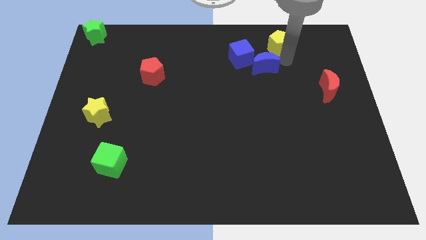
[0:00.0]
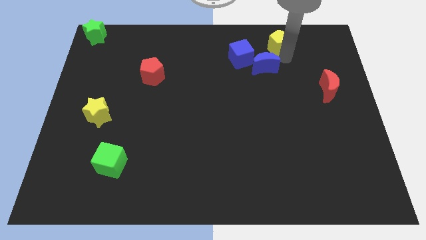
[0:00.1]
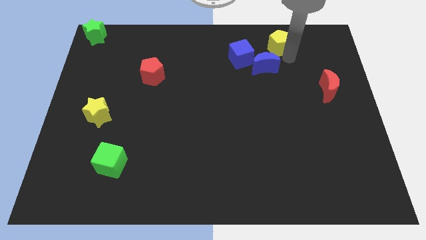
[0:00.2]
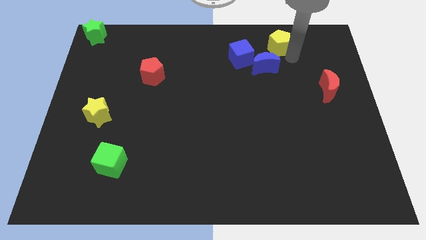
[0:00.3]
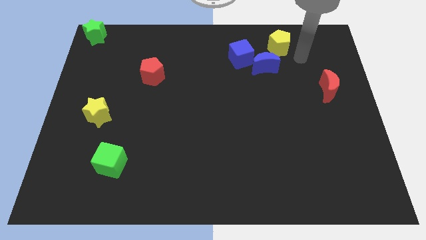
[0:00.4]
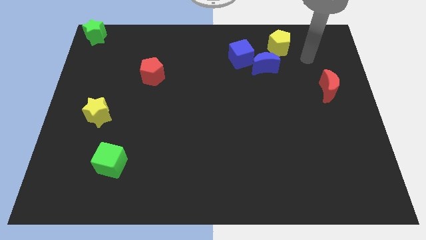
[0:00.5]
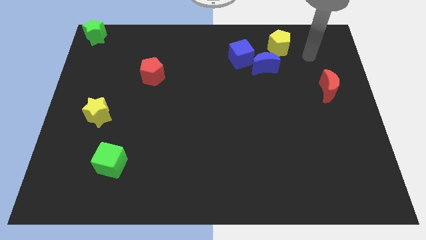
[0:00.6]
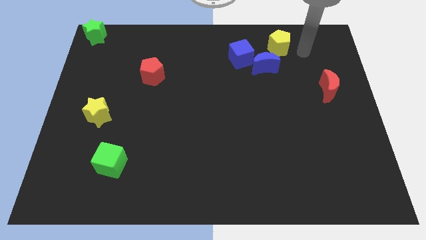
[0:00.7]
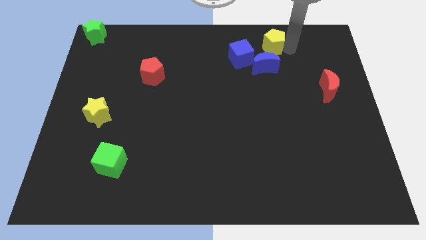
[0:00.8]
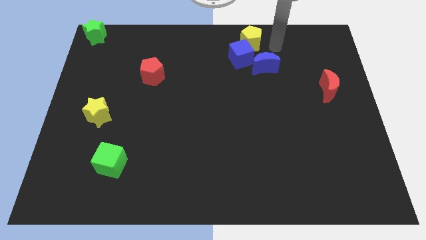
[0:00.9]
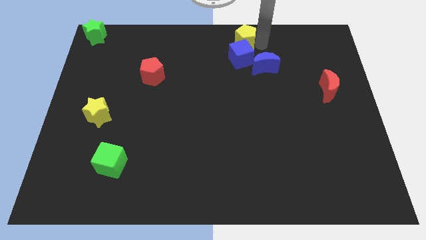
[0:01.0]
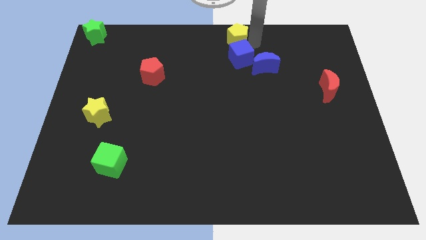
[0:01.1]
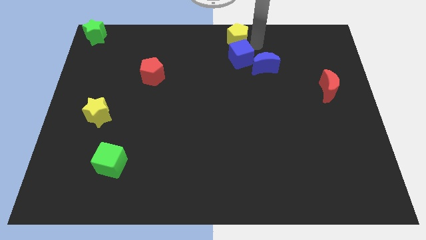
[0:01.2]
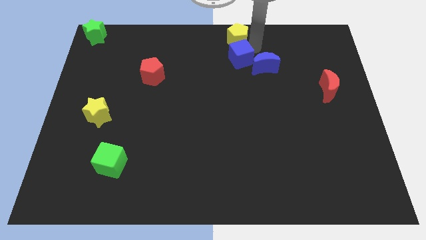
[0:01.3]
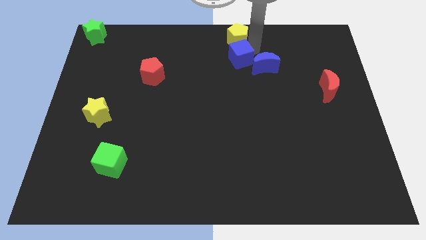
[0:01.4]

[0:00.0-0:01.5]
push the yellow pentagon on top of the blue cube

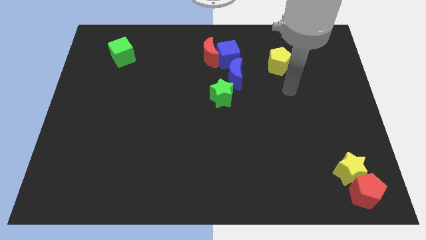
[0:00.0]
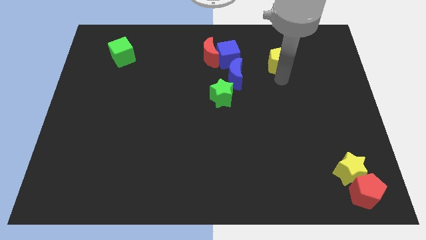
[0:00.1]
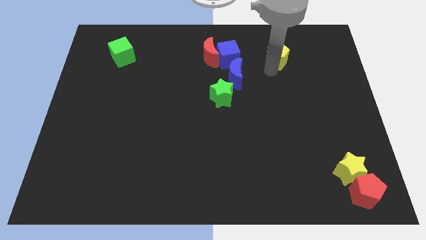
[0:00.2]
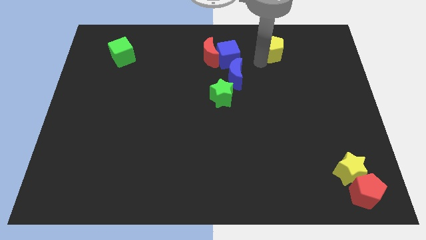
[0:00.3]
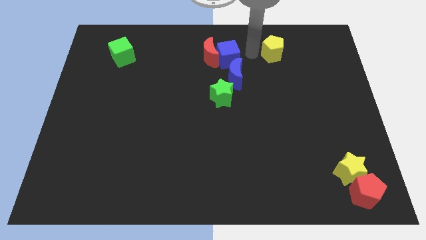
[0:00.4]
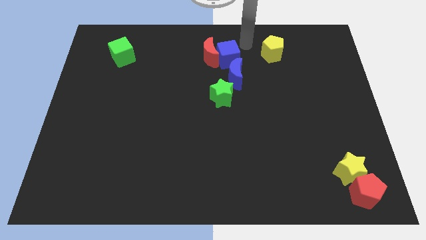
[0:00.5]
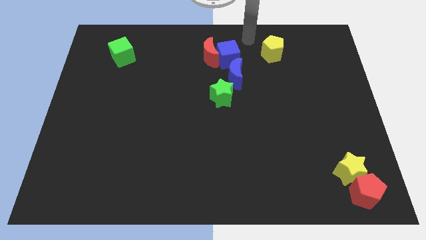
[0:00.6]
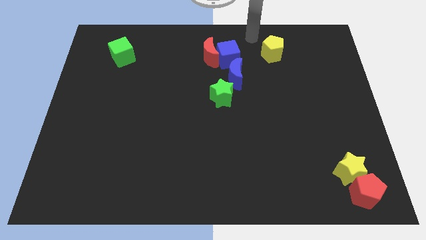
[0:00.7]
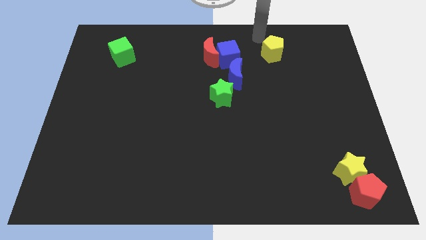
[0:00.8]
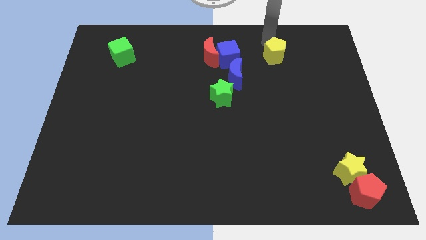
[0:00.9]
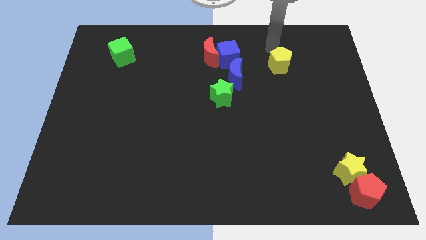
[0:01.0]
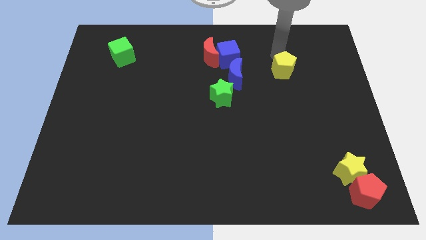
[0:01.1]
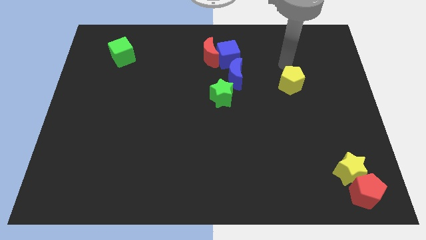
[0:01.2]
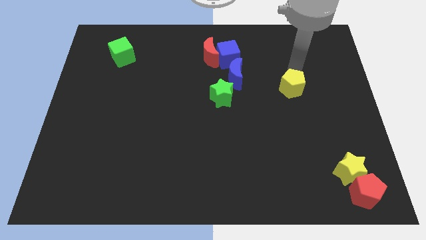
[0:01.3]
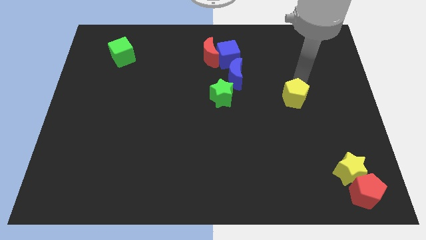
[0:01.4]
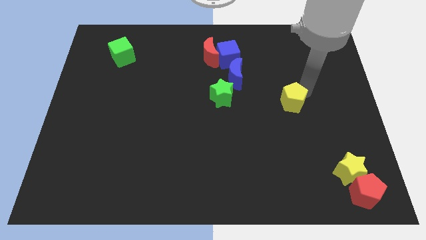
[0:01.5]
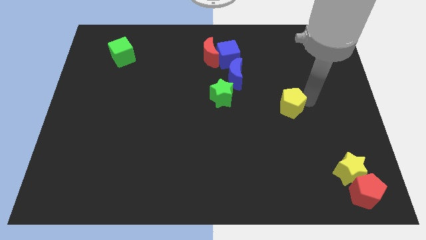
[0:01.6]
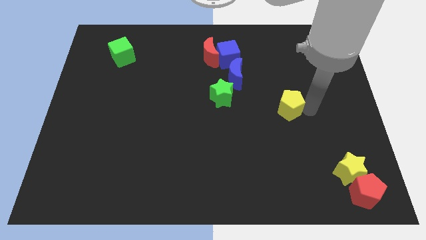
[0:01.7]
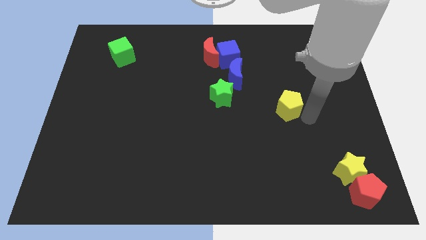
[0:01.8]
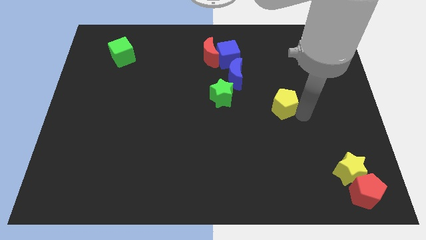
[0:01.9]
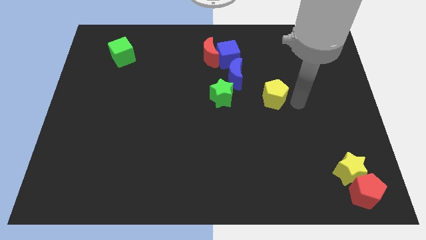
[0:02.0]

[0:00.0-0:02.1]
place the yellow pentagon to the right side of the green star

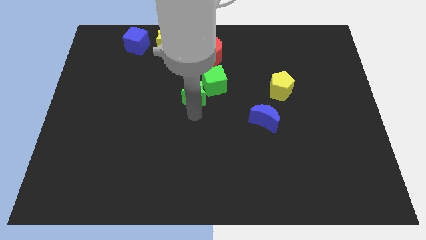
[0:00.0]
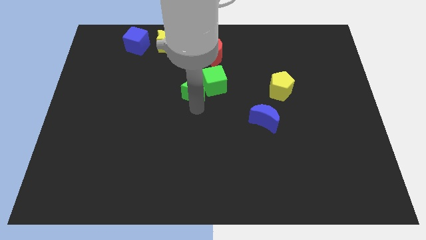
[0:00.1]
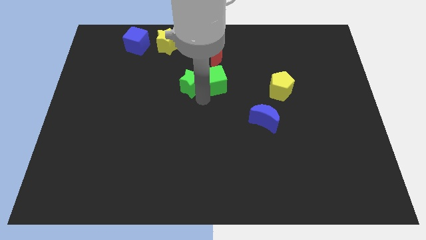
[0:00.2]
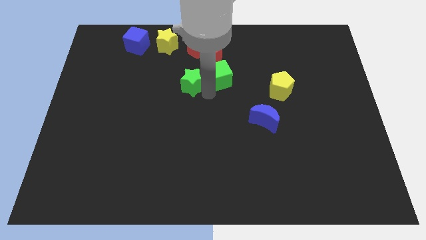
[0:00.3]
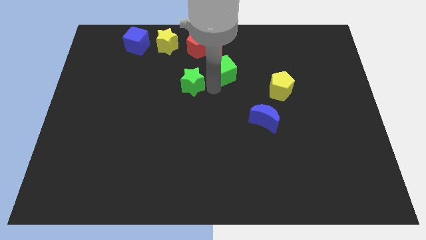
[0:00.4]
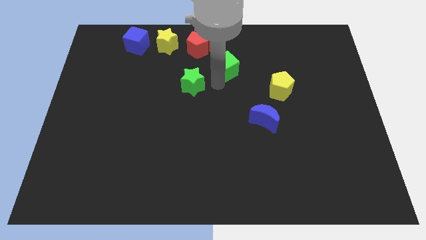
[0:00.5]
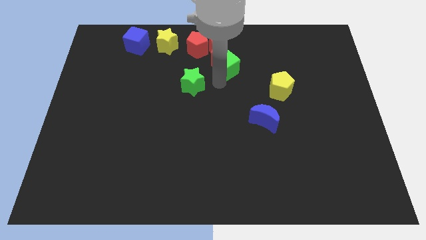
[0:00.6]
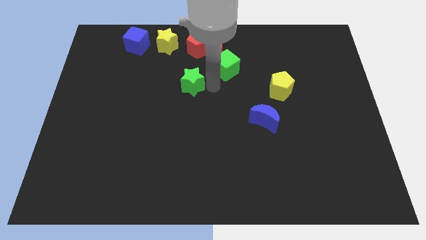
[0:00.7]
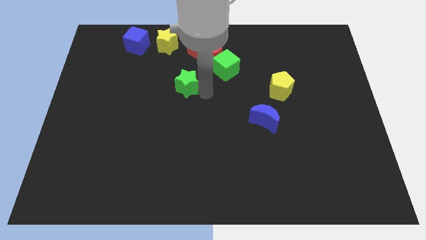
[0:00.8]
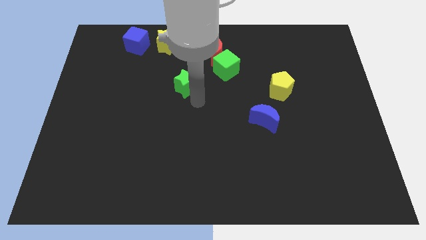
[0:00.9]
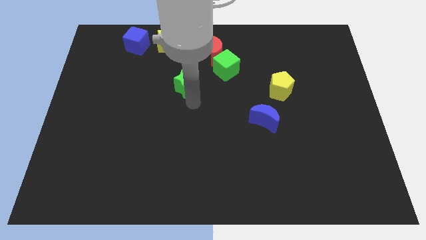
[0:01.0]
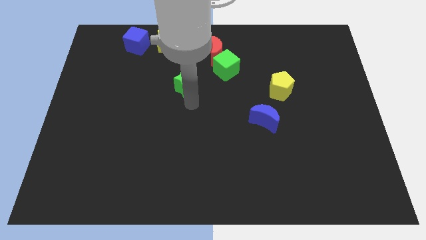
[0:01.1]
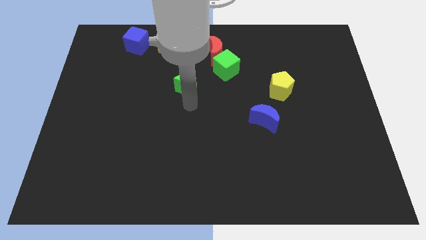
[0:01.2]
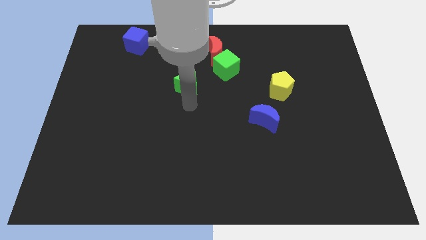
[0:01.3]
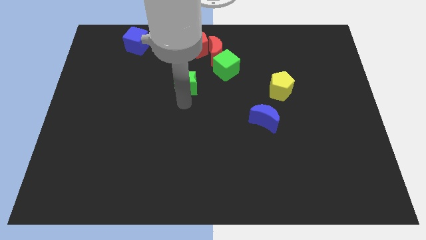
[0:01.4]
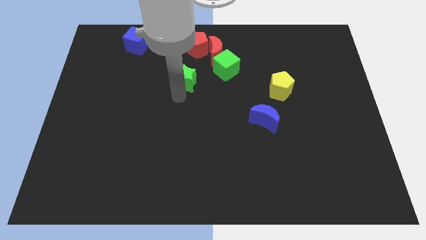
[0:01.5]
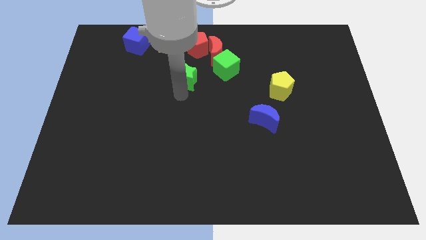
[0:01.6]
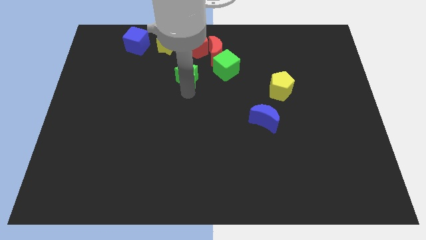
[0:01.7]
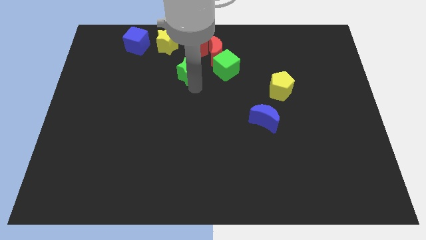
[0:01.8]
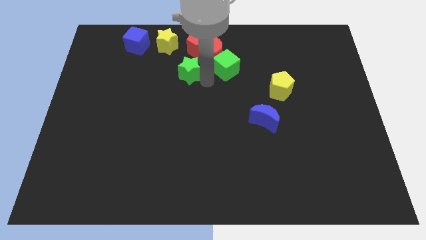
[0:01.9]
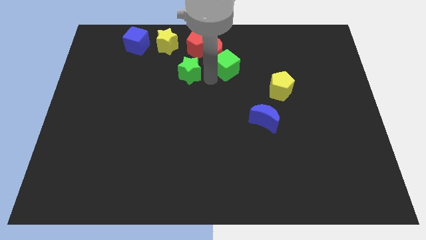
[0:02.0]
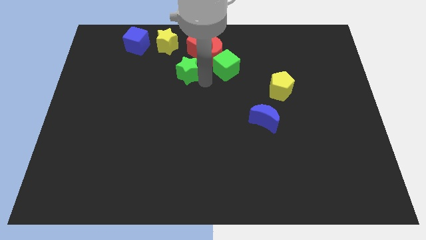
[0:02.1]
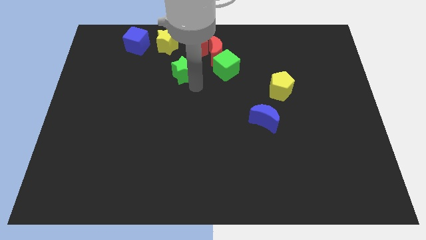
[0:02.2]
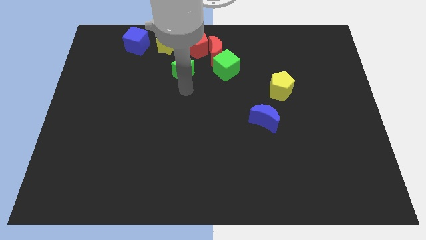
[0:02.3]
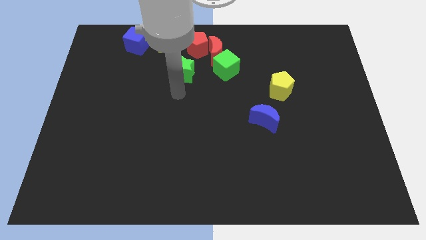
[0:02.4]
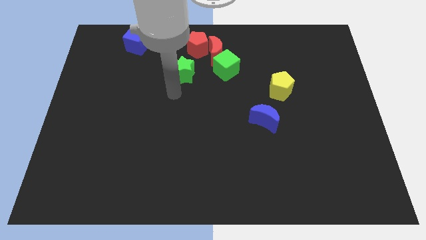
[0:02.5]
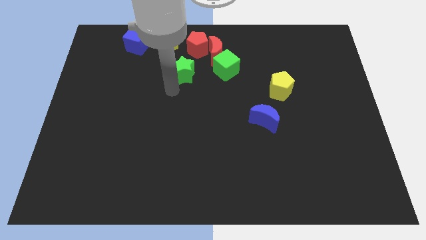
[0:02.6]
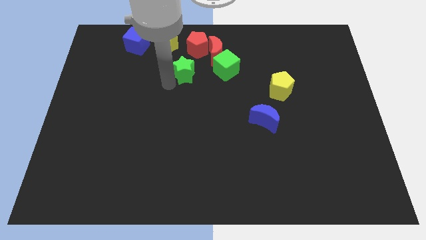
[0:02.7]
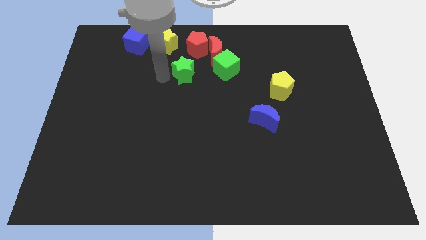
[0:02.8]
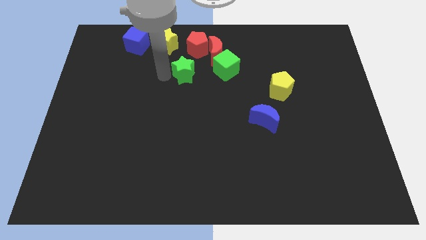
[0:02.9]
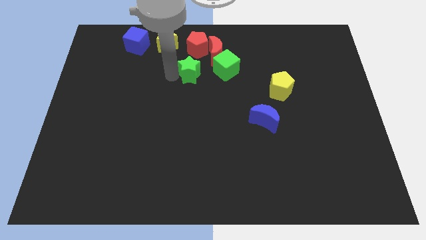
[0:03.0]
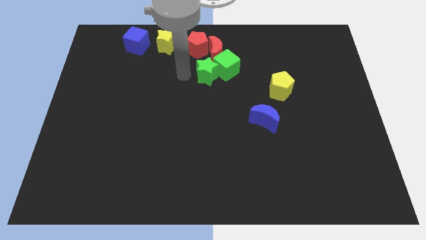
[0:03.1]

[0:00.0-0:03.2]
place the green star into the green cube

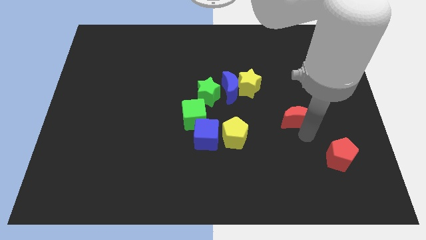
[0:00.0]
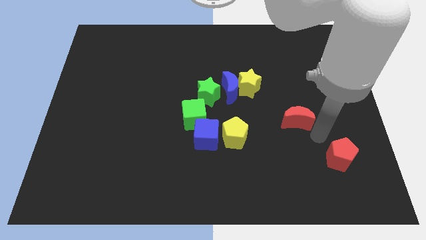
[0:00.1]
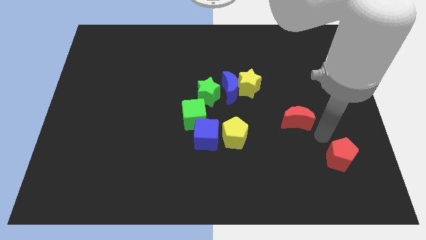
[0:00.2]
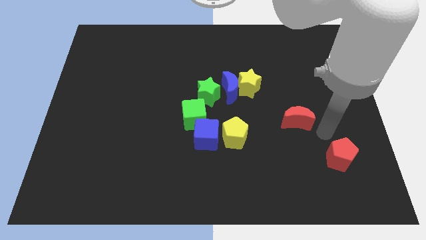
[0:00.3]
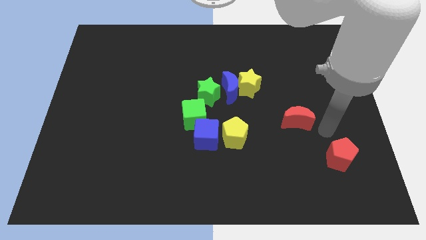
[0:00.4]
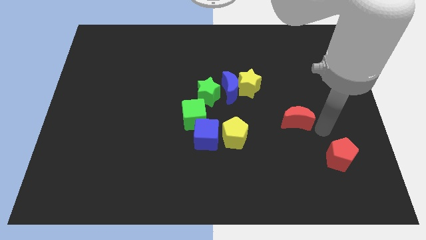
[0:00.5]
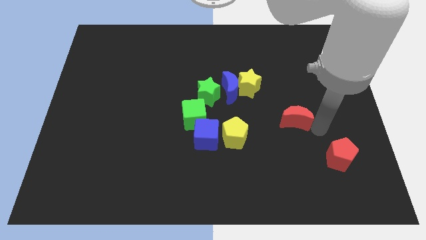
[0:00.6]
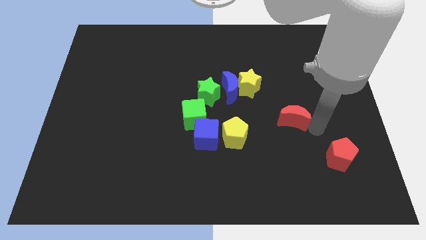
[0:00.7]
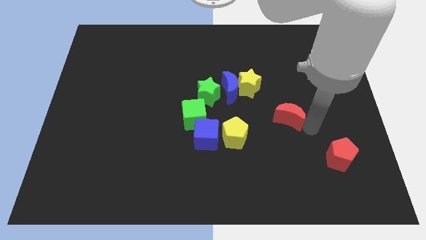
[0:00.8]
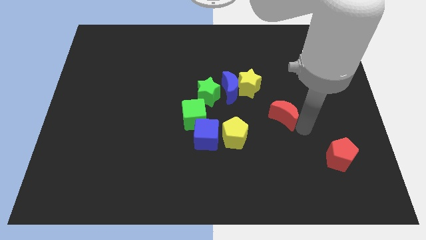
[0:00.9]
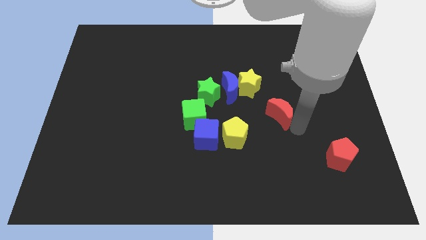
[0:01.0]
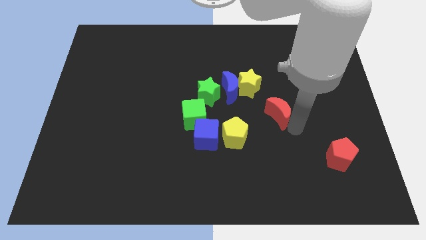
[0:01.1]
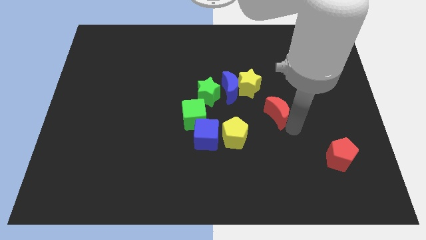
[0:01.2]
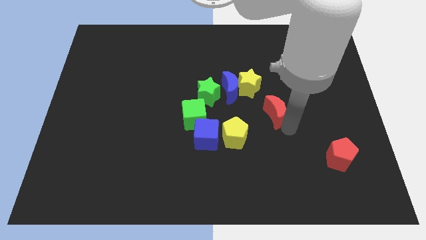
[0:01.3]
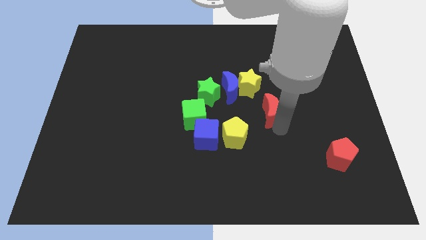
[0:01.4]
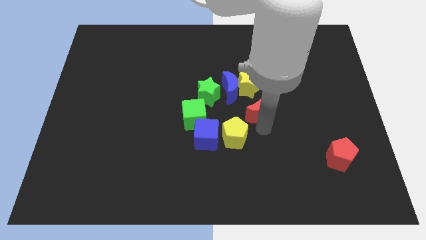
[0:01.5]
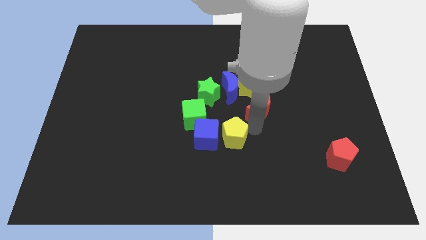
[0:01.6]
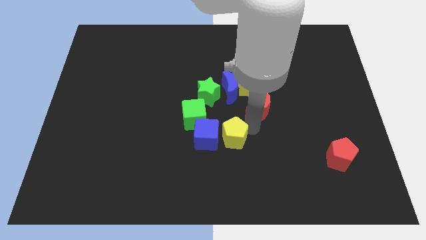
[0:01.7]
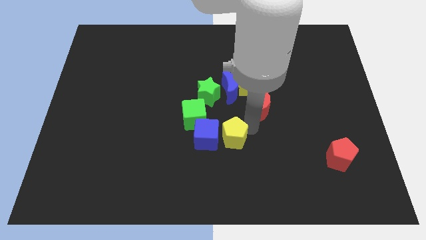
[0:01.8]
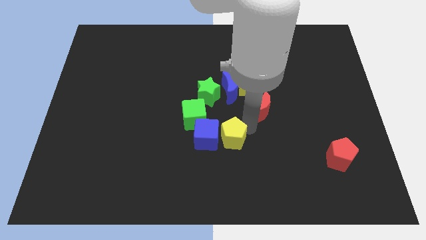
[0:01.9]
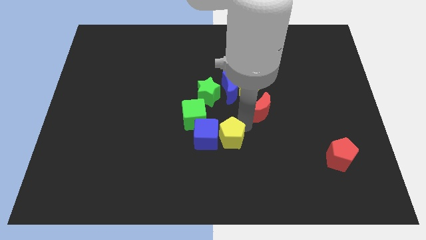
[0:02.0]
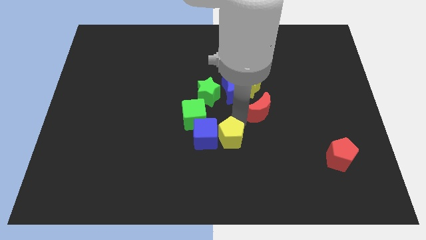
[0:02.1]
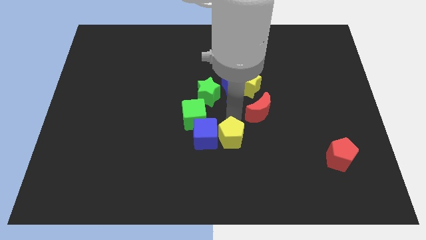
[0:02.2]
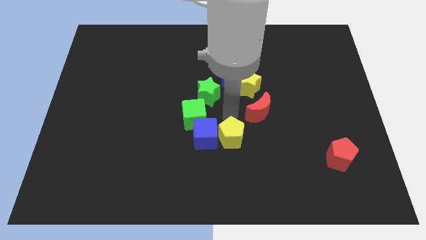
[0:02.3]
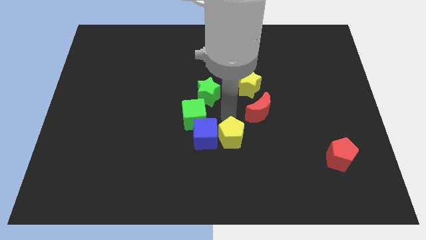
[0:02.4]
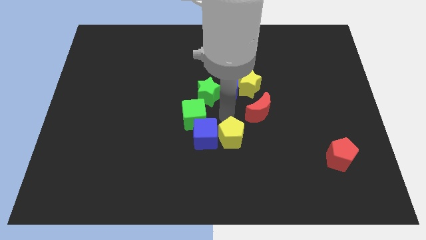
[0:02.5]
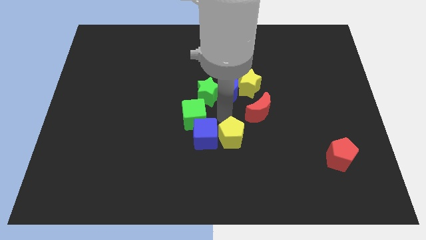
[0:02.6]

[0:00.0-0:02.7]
place the red moon below the yellow star
